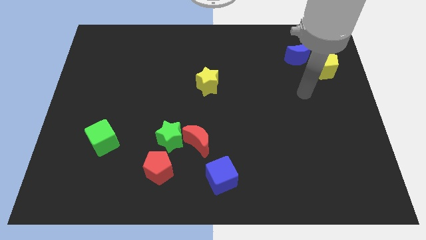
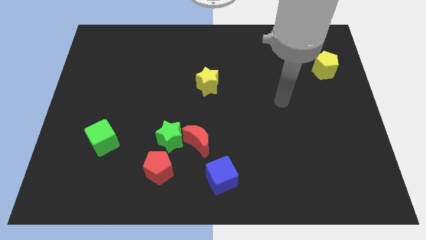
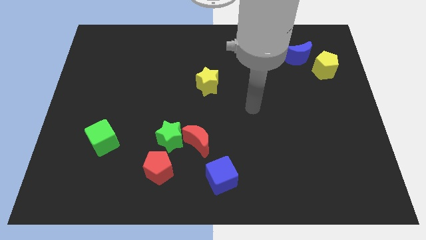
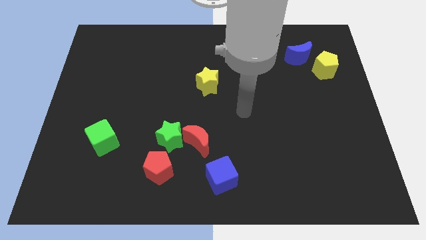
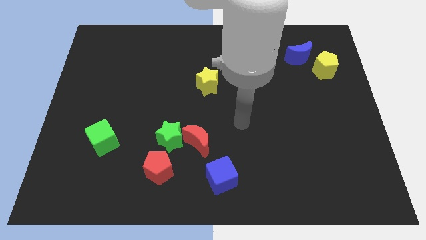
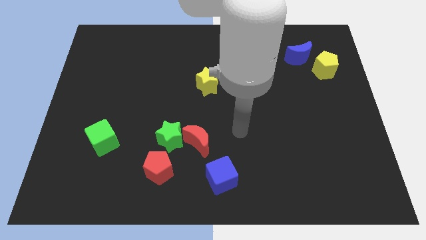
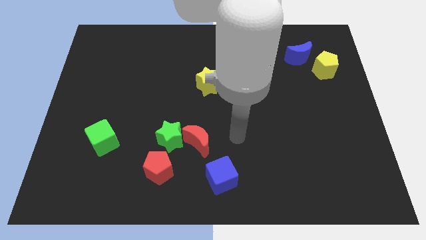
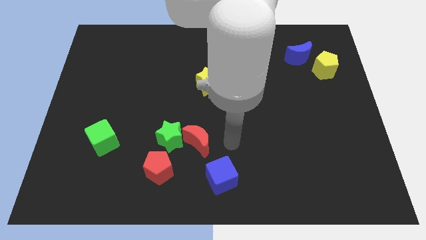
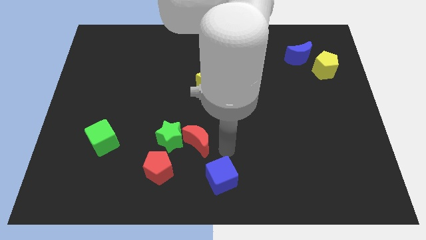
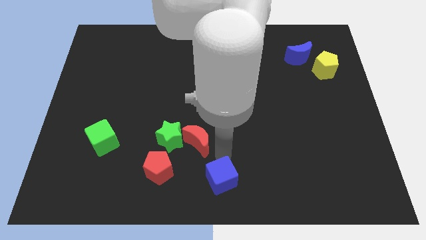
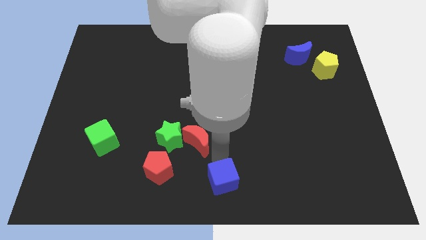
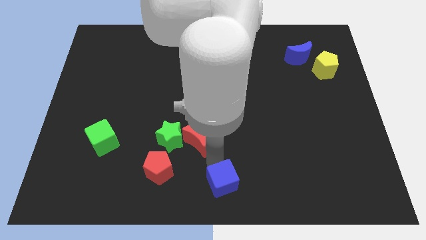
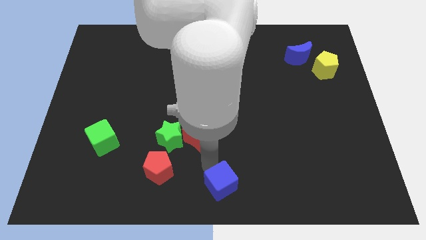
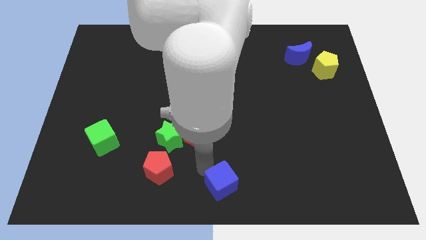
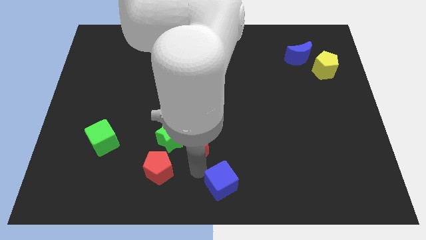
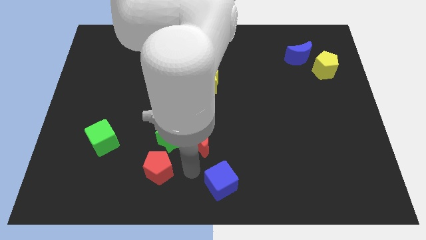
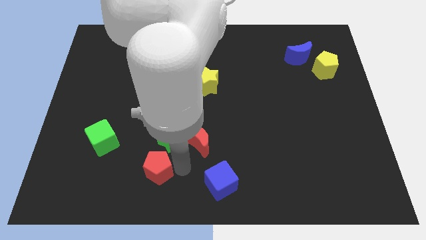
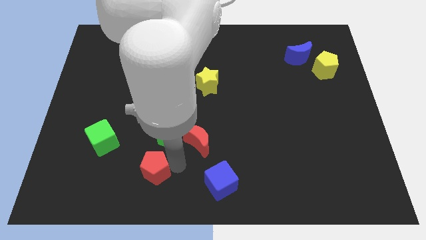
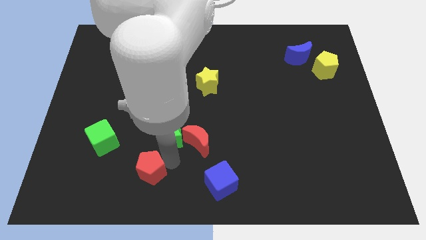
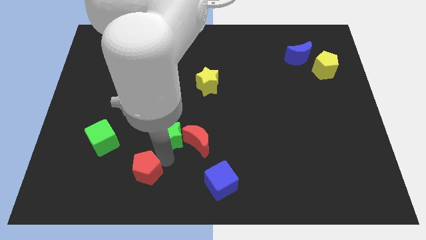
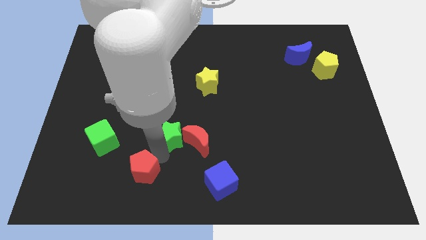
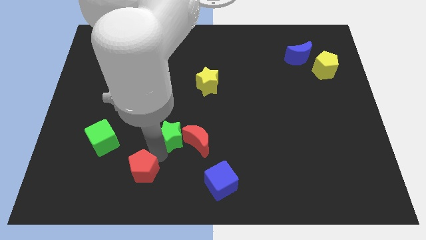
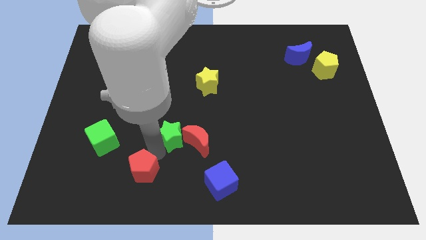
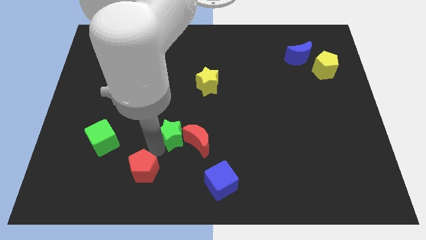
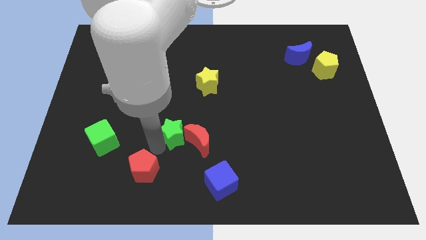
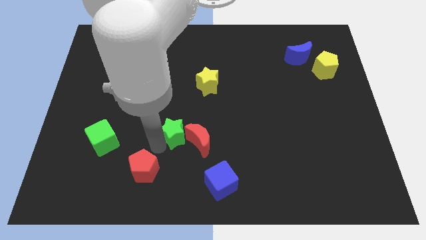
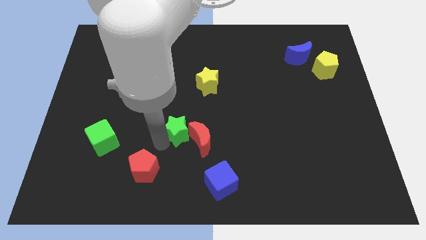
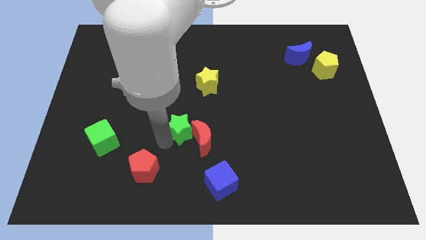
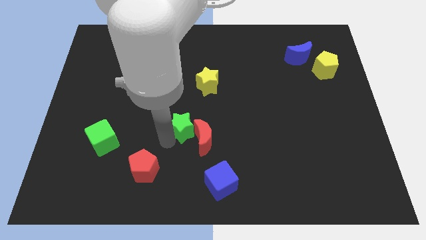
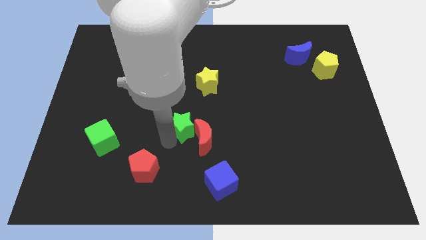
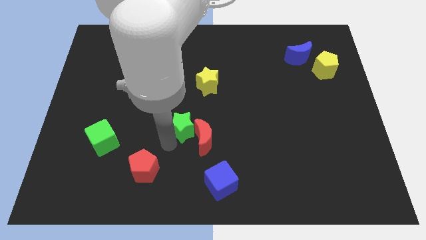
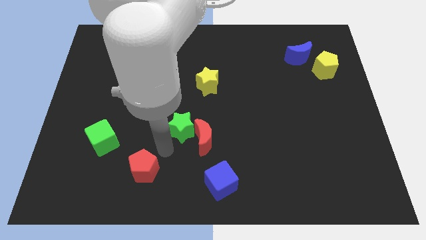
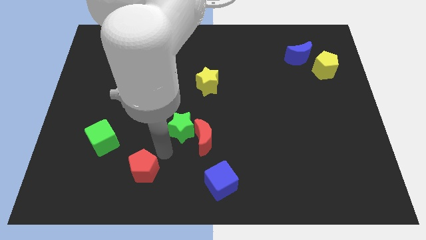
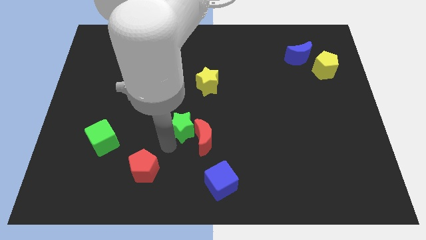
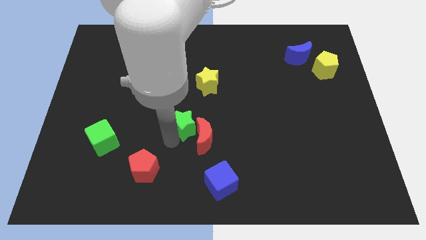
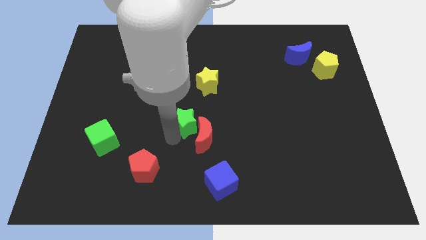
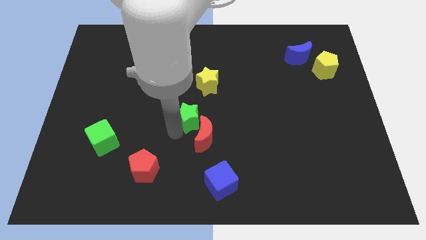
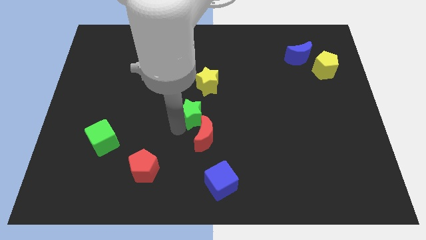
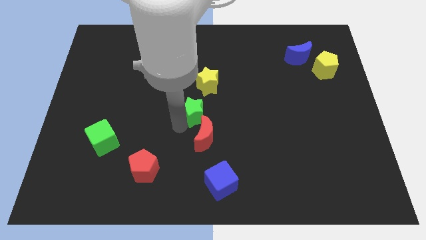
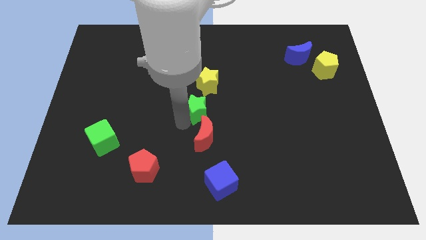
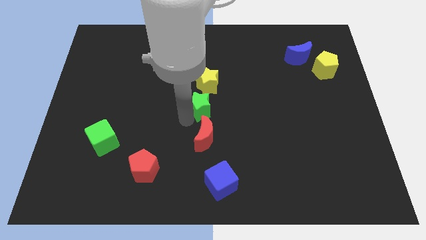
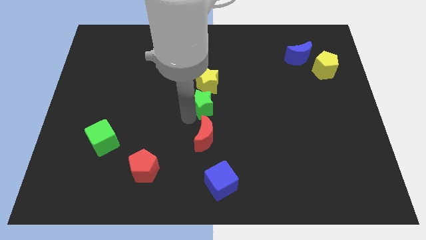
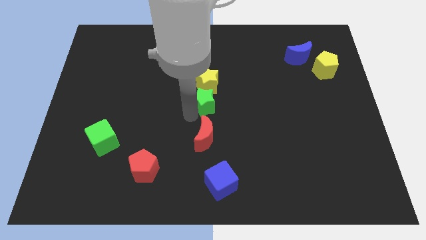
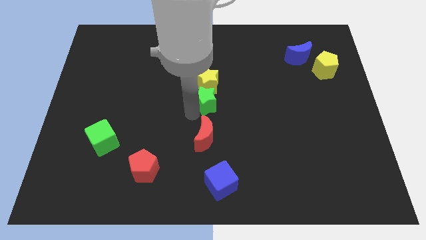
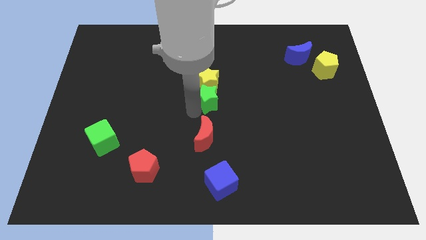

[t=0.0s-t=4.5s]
slide the green star next to the yellow star

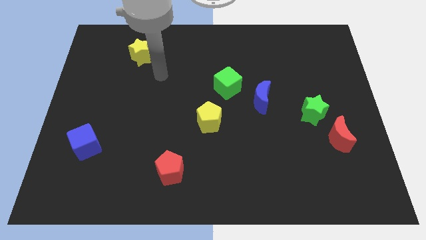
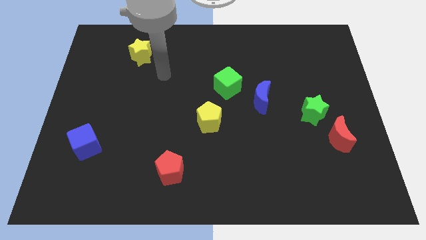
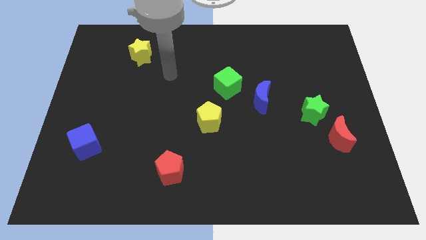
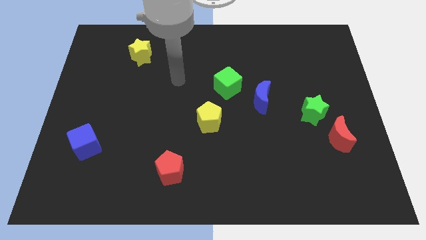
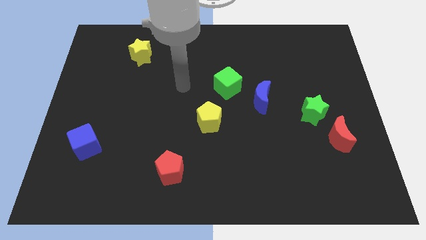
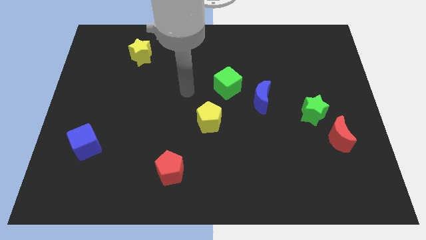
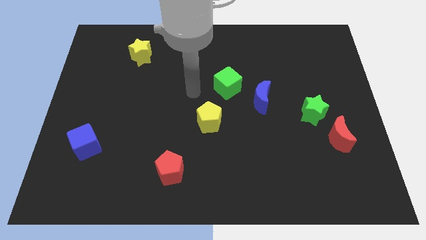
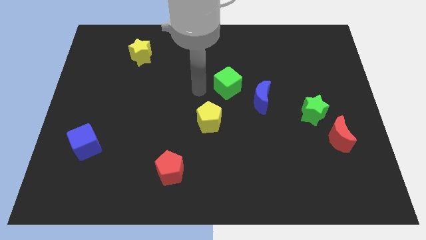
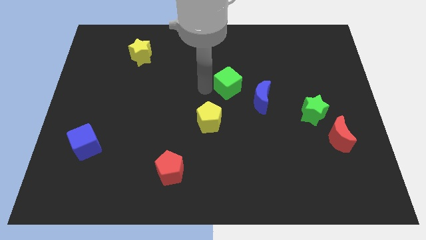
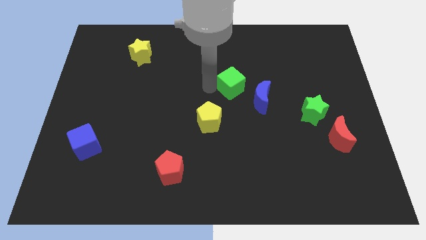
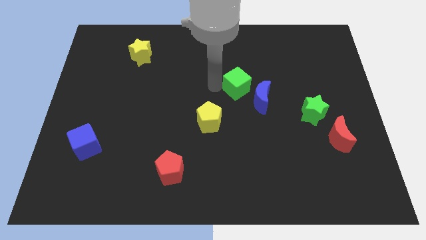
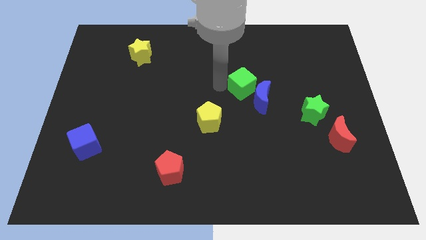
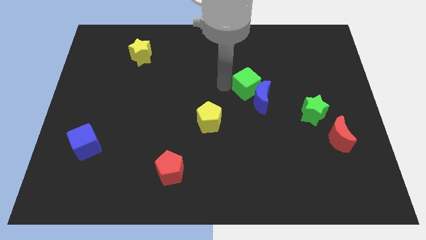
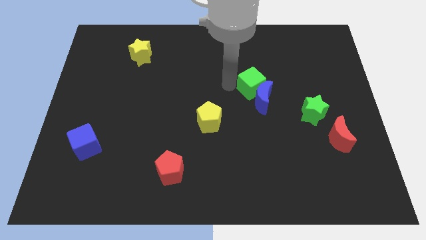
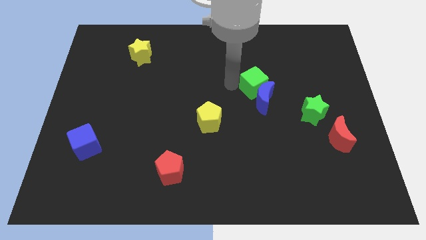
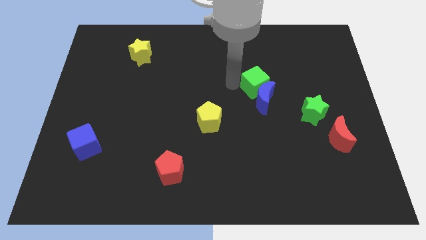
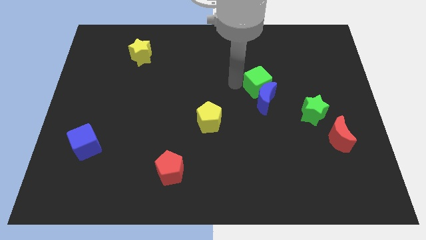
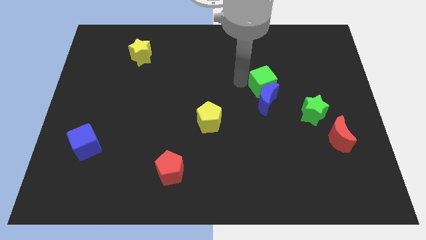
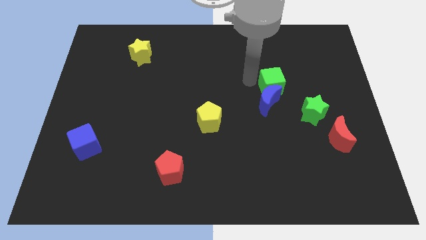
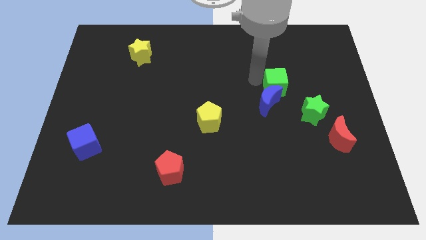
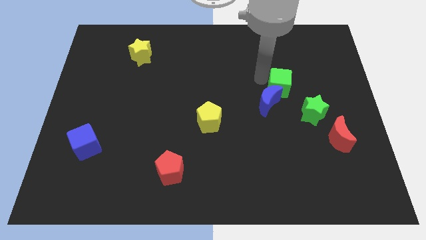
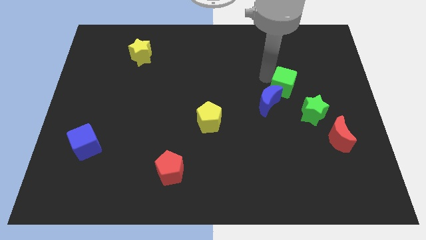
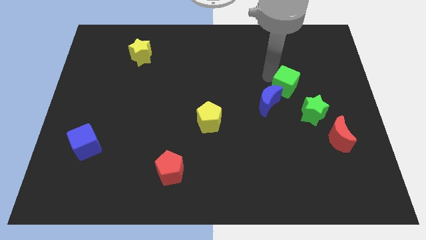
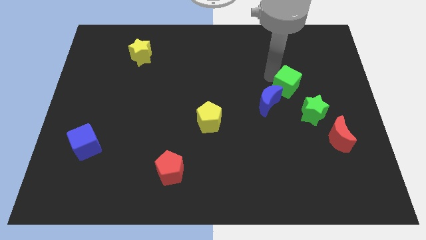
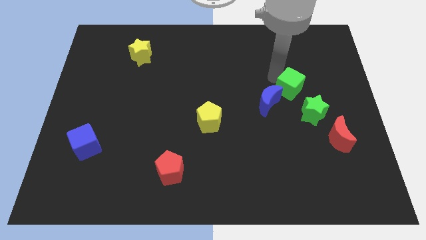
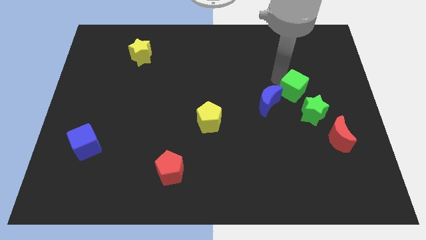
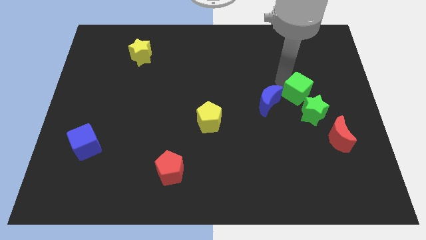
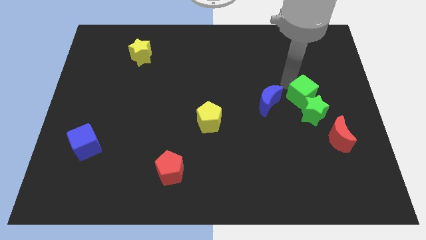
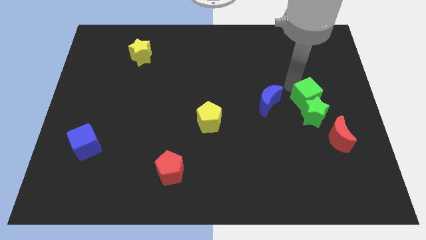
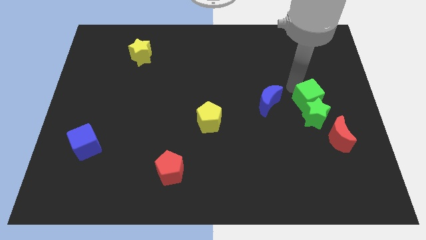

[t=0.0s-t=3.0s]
put the green cube towards the green star

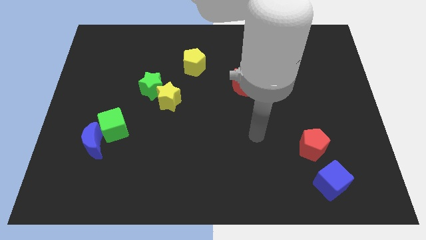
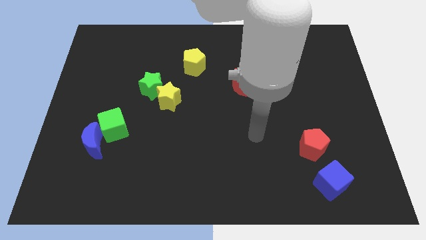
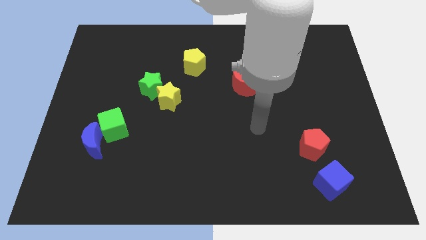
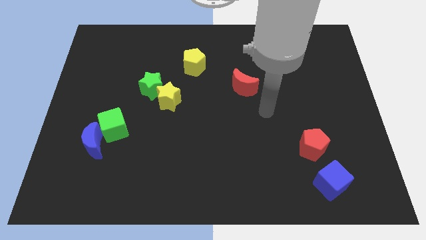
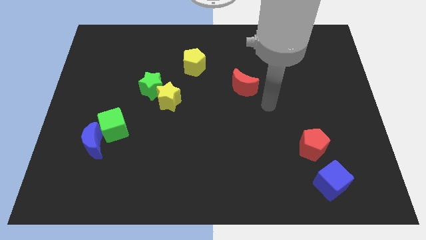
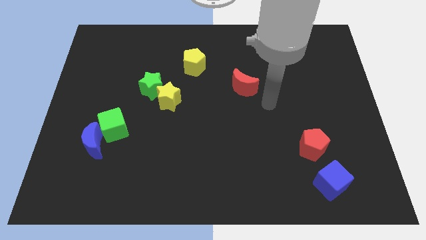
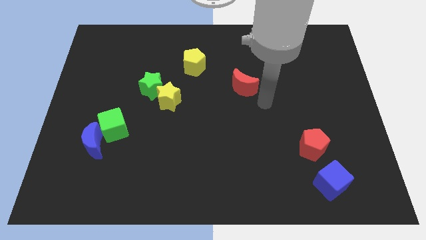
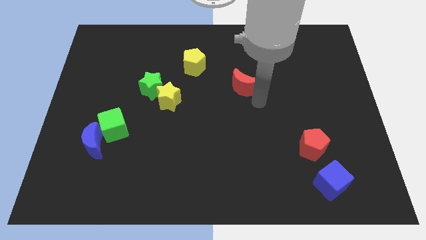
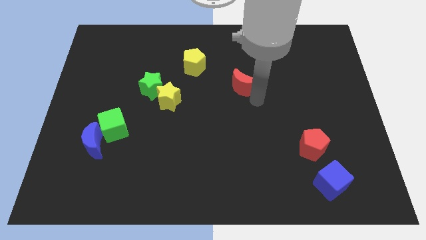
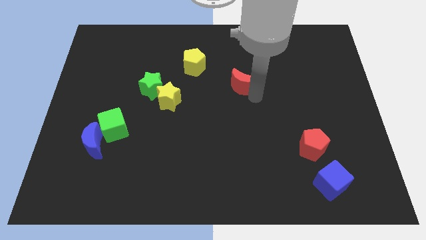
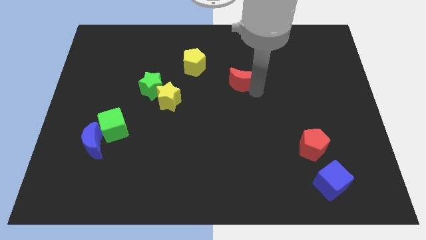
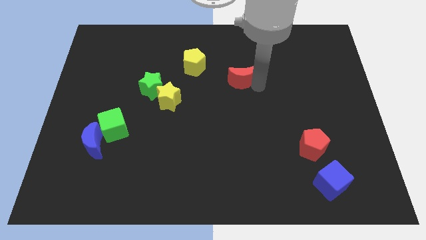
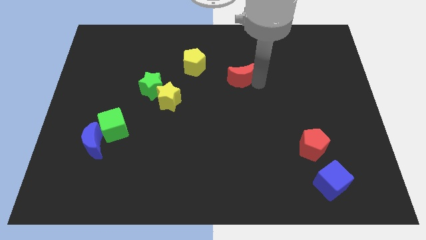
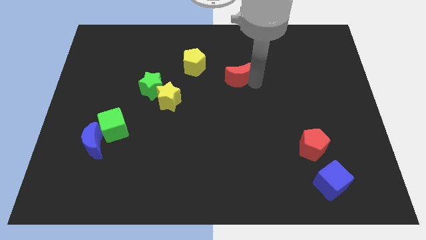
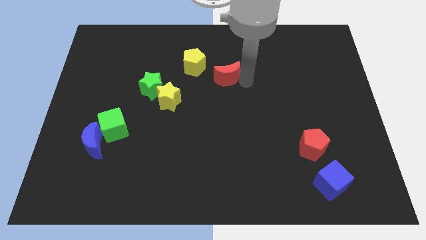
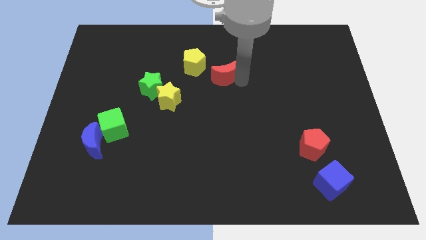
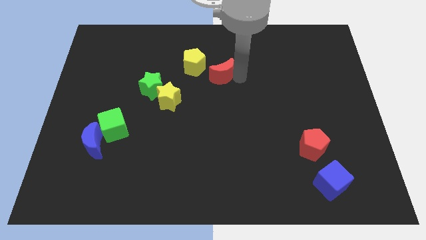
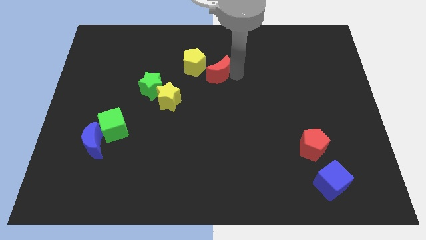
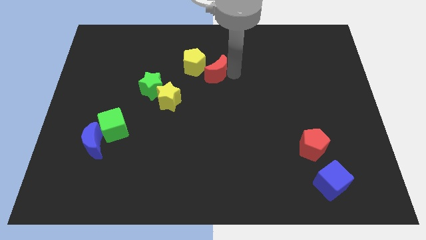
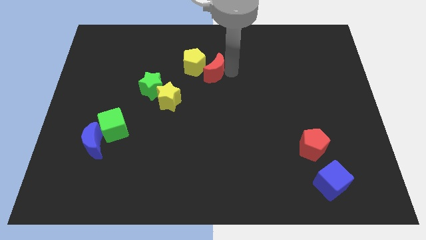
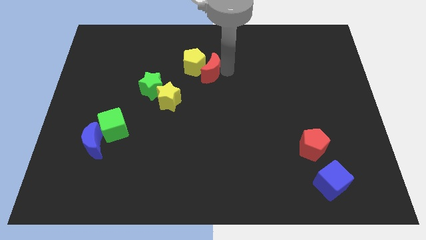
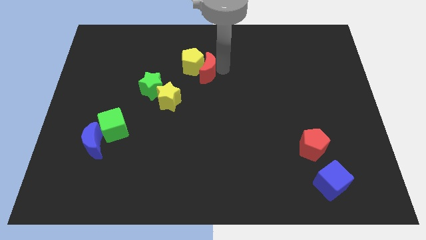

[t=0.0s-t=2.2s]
slide the red moon close to the yellow pentagon
